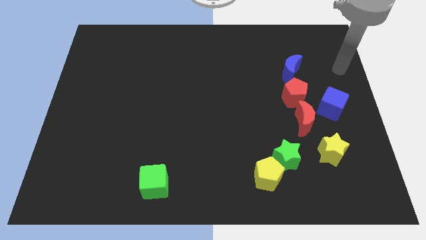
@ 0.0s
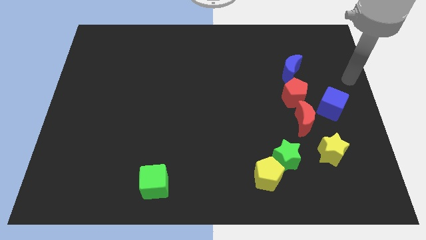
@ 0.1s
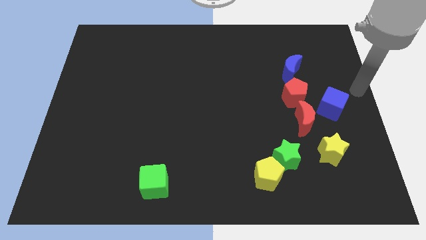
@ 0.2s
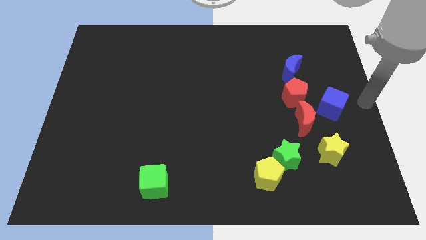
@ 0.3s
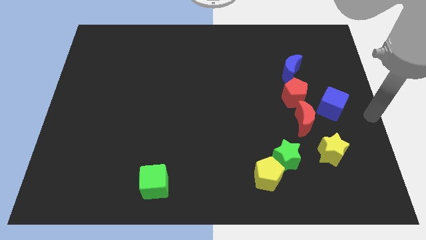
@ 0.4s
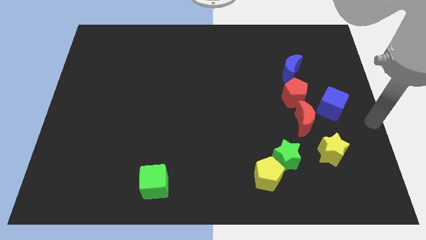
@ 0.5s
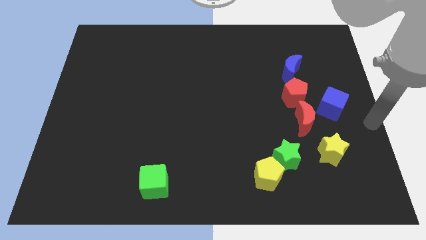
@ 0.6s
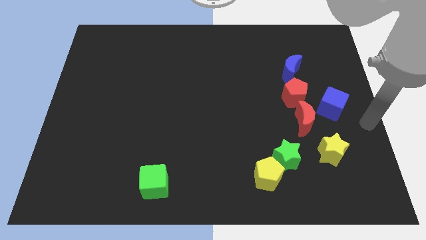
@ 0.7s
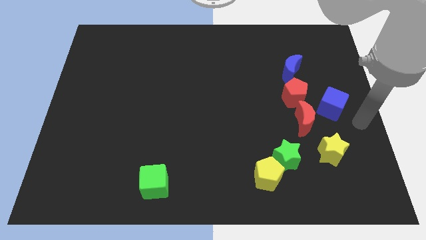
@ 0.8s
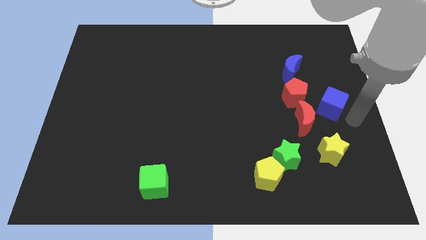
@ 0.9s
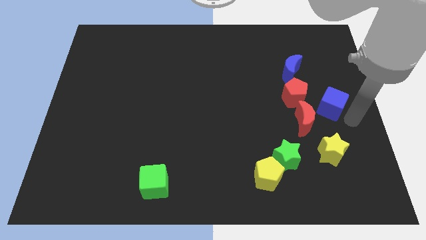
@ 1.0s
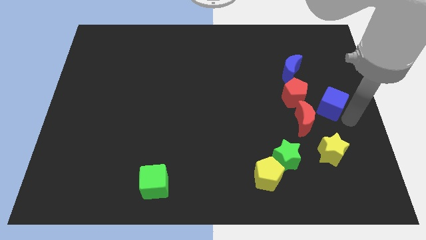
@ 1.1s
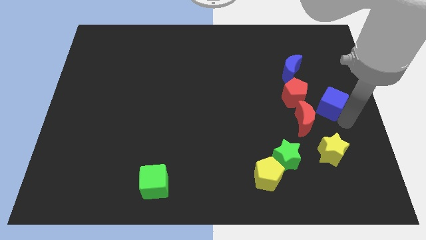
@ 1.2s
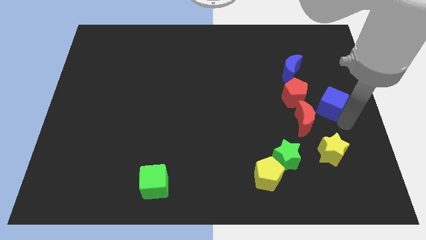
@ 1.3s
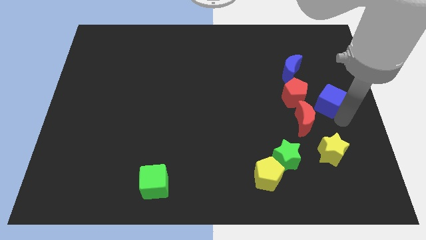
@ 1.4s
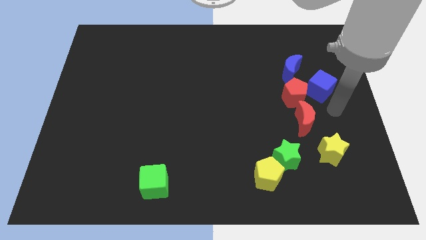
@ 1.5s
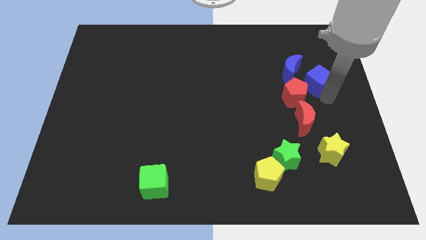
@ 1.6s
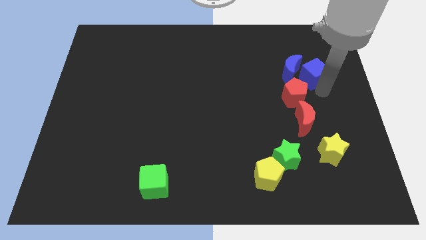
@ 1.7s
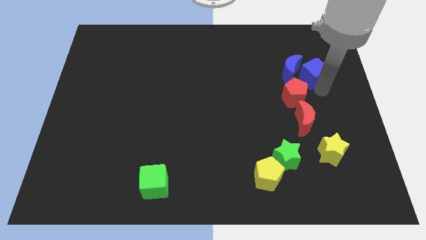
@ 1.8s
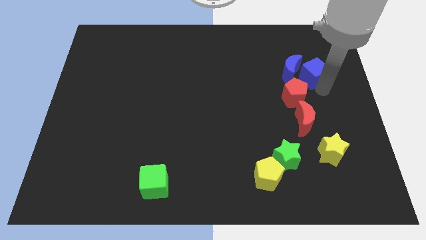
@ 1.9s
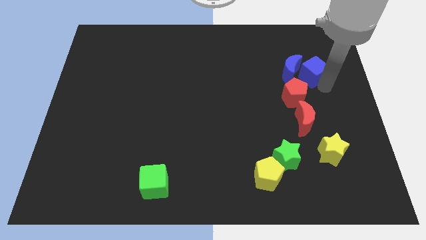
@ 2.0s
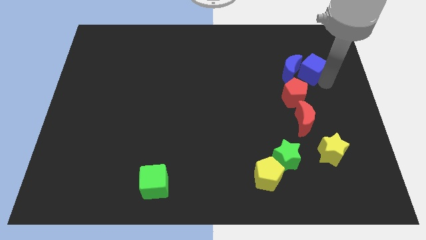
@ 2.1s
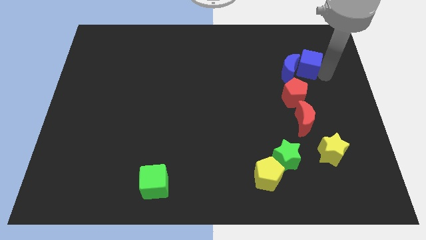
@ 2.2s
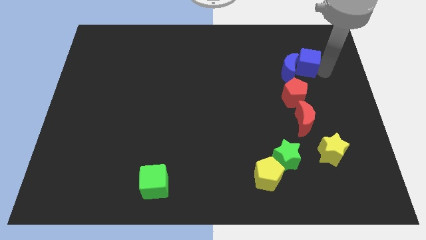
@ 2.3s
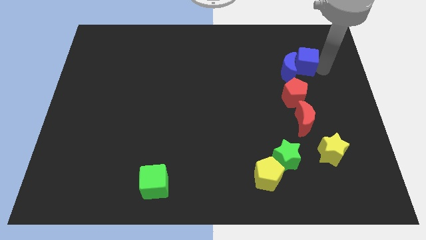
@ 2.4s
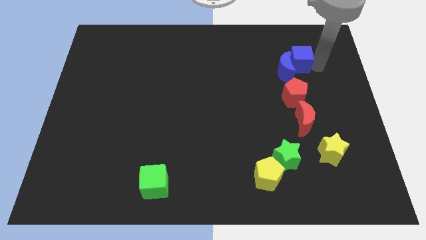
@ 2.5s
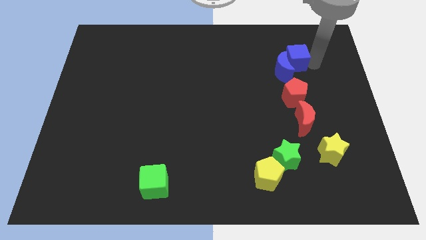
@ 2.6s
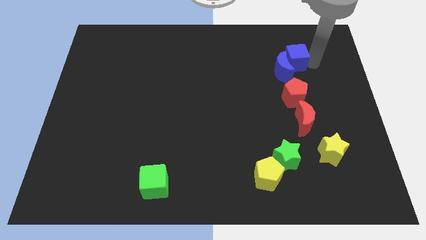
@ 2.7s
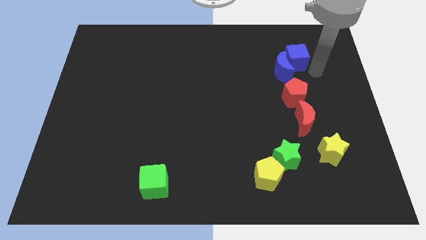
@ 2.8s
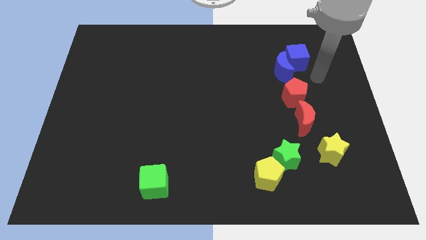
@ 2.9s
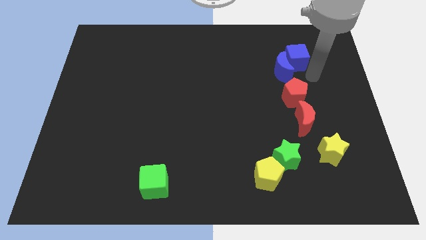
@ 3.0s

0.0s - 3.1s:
move the blue cube into the right side of the blue crescent

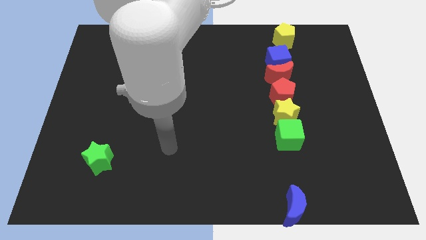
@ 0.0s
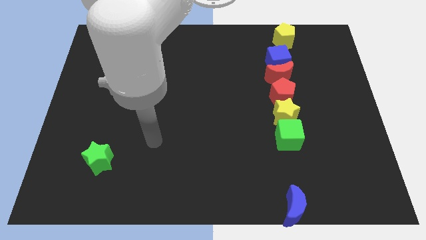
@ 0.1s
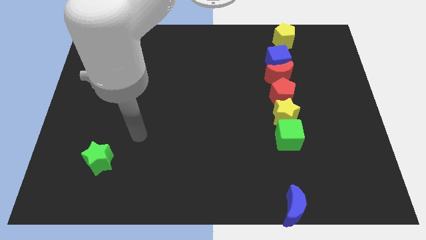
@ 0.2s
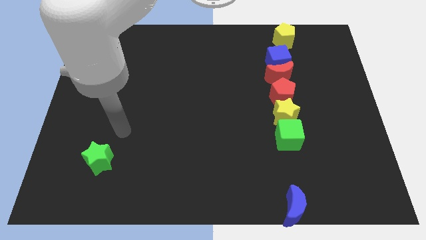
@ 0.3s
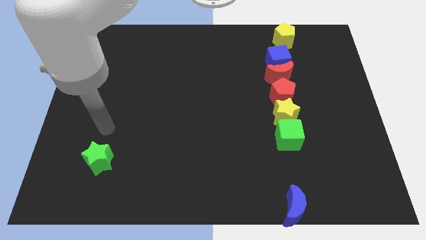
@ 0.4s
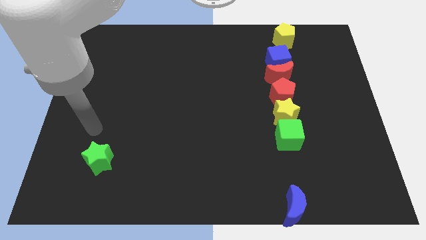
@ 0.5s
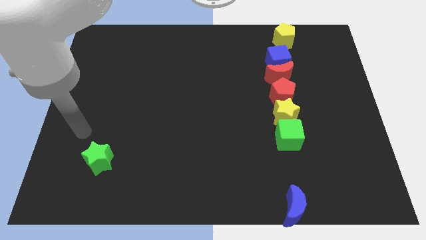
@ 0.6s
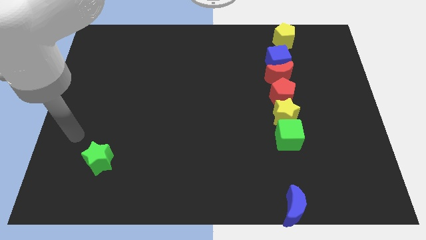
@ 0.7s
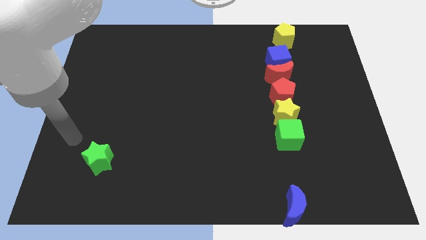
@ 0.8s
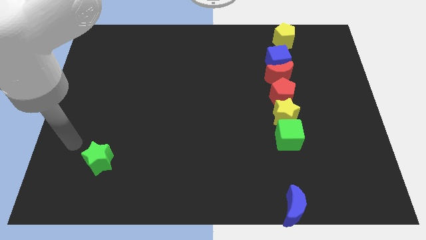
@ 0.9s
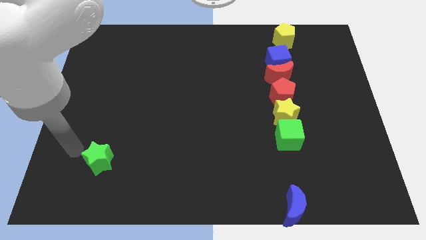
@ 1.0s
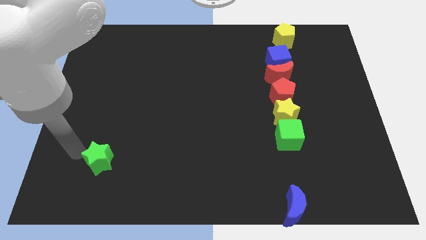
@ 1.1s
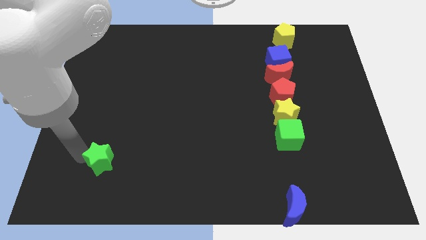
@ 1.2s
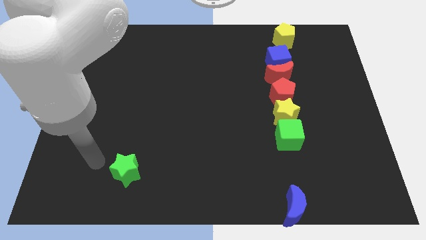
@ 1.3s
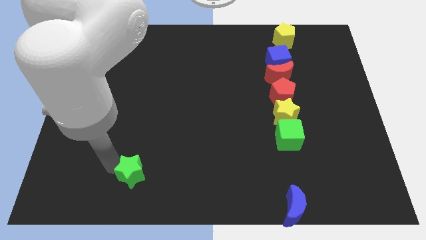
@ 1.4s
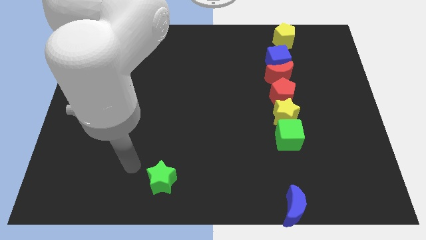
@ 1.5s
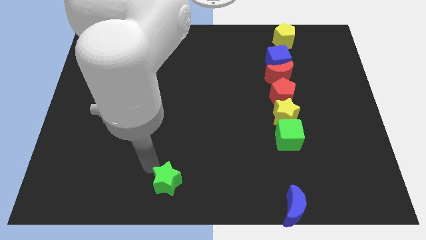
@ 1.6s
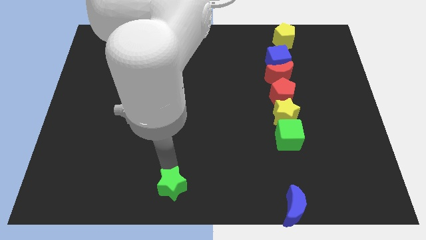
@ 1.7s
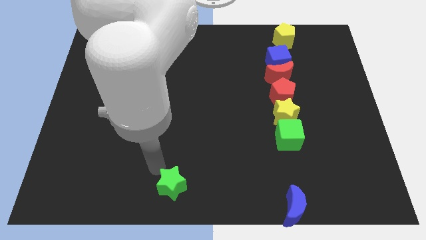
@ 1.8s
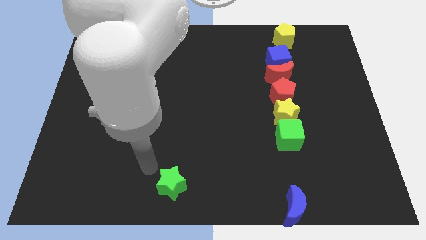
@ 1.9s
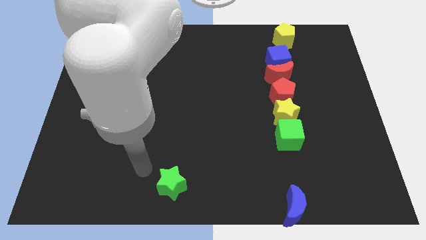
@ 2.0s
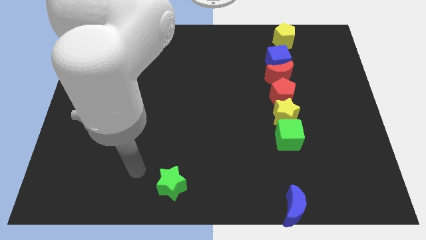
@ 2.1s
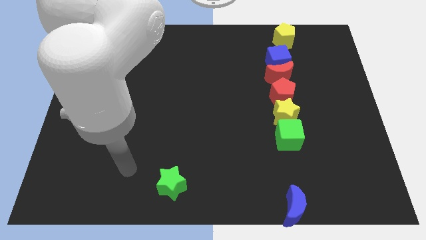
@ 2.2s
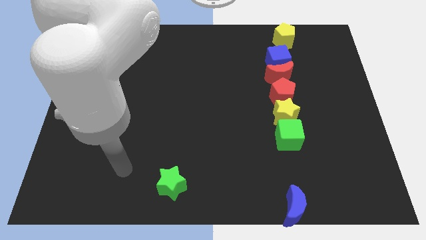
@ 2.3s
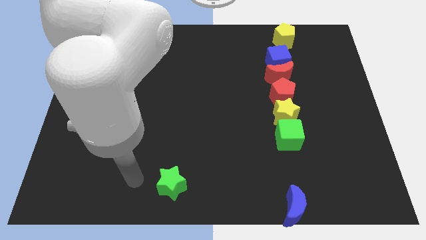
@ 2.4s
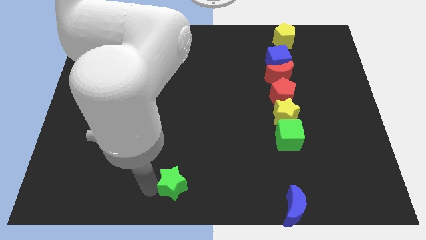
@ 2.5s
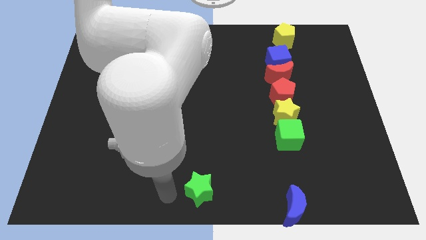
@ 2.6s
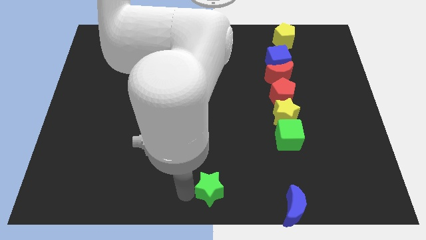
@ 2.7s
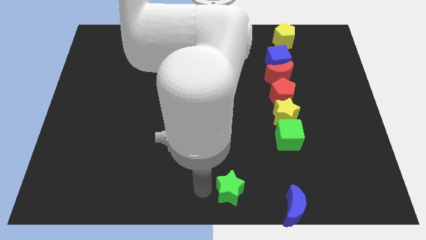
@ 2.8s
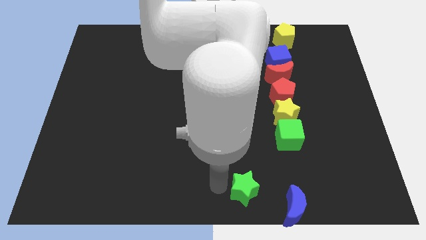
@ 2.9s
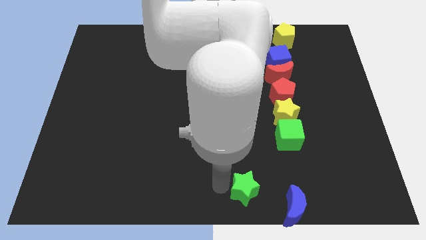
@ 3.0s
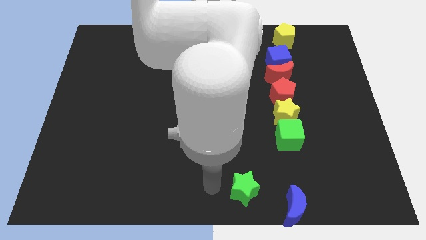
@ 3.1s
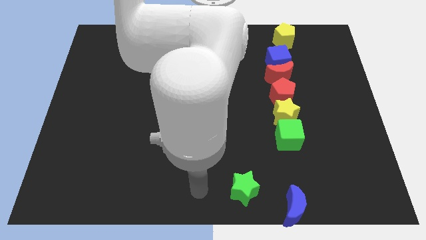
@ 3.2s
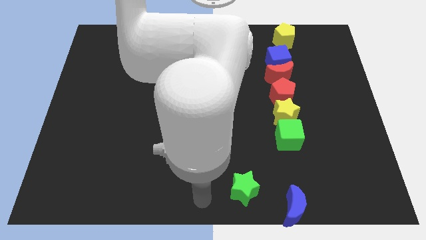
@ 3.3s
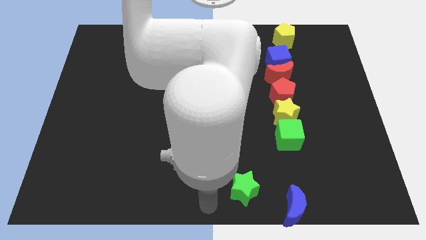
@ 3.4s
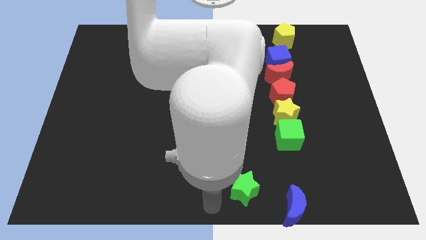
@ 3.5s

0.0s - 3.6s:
place the green star left to the blue moon

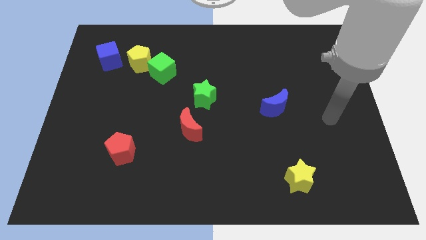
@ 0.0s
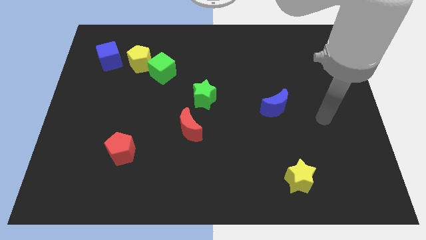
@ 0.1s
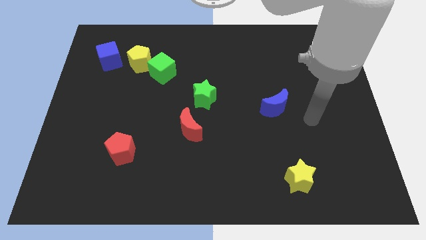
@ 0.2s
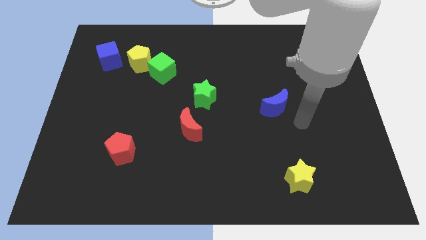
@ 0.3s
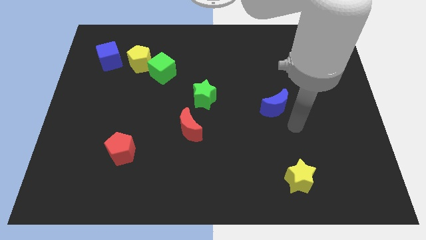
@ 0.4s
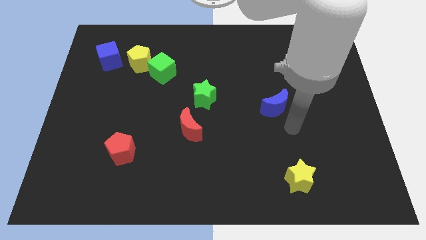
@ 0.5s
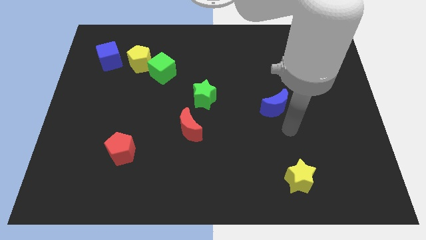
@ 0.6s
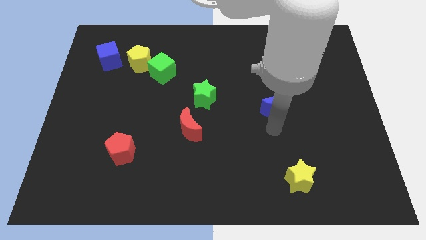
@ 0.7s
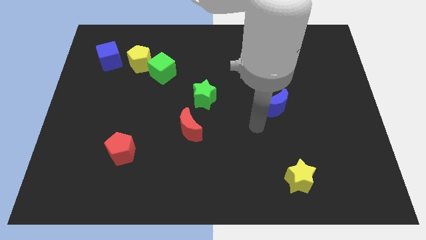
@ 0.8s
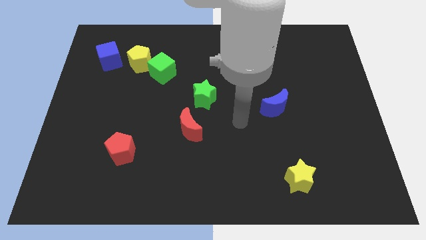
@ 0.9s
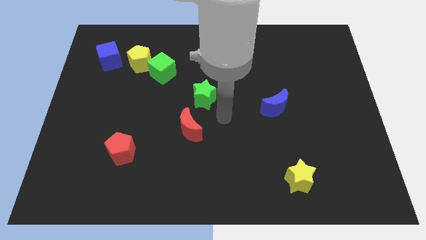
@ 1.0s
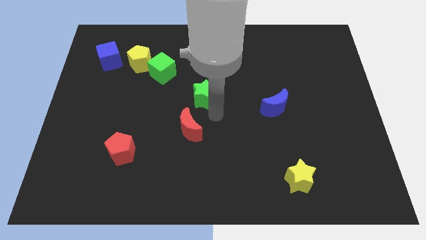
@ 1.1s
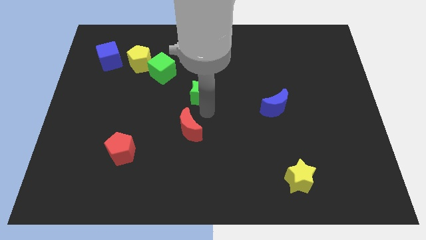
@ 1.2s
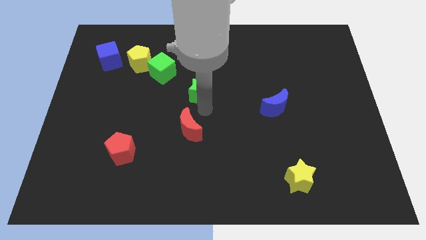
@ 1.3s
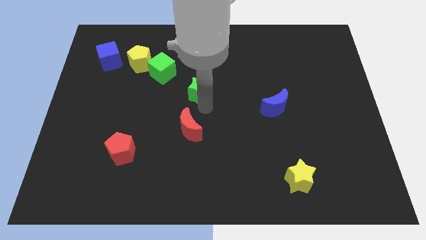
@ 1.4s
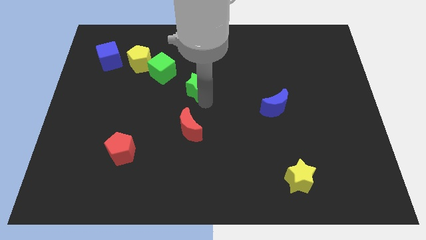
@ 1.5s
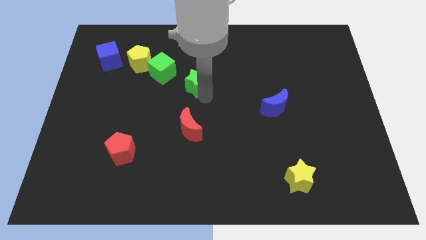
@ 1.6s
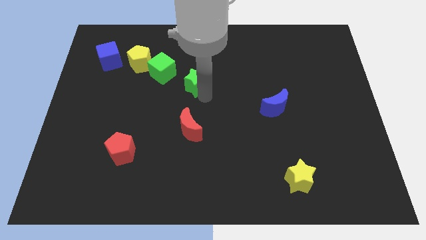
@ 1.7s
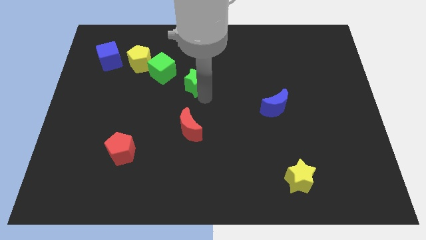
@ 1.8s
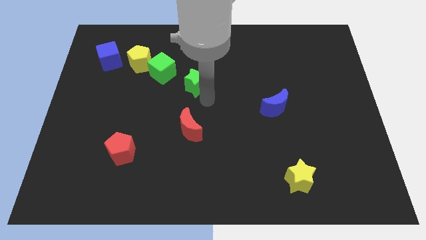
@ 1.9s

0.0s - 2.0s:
move the green star towards the green cube

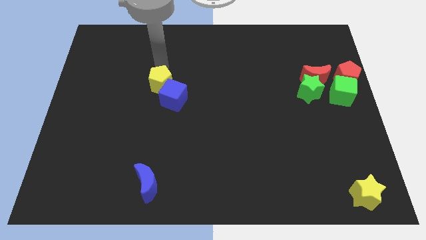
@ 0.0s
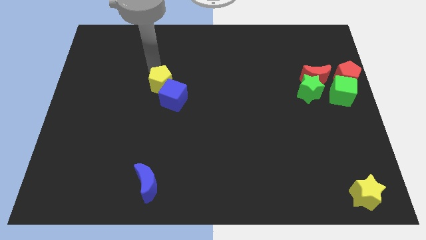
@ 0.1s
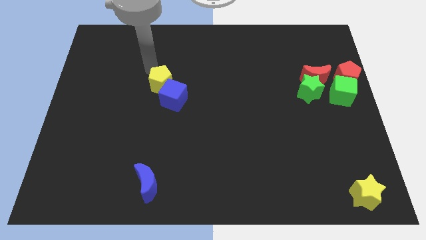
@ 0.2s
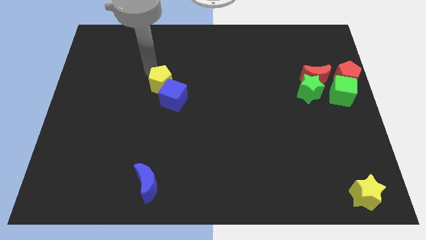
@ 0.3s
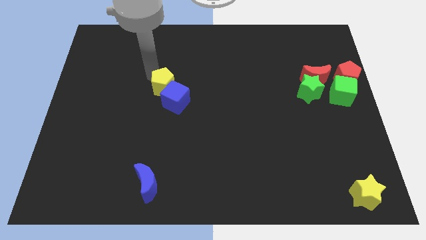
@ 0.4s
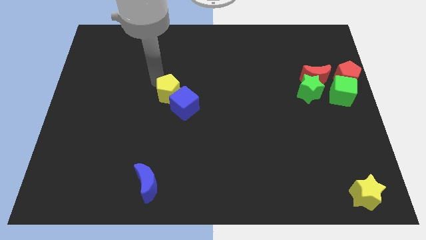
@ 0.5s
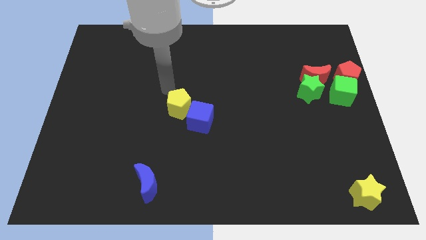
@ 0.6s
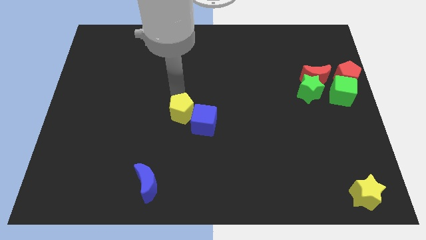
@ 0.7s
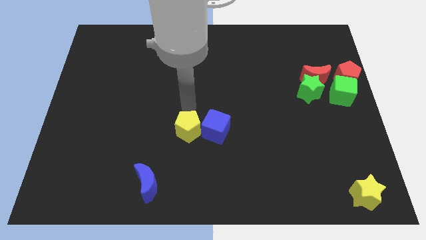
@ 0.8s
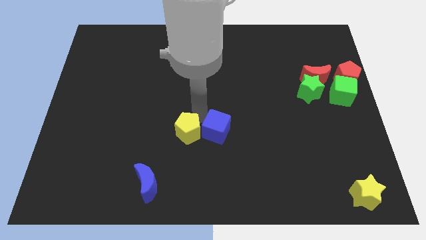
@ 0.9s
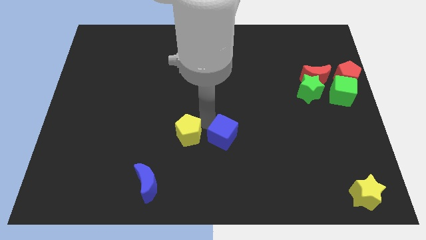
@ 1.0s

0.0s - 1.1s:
push the yellow pentagon downwards
